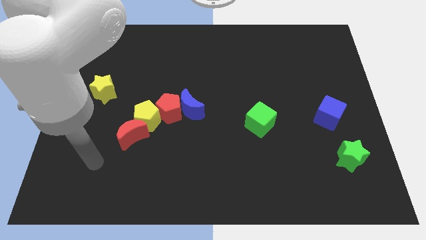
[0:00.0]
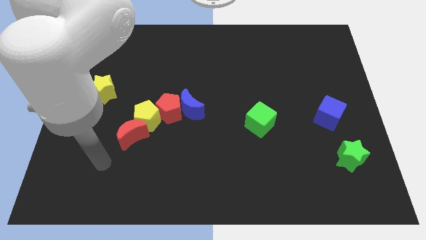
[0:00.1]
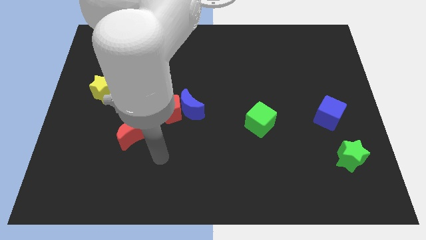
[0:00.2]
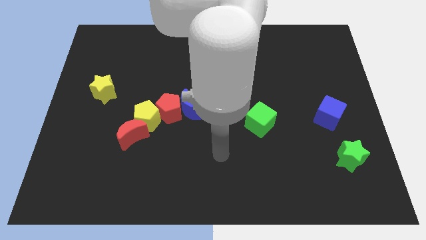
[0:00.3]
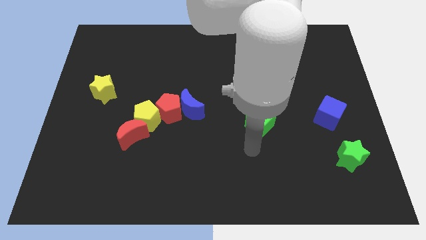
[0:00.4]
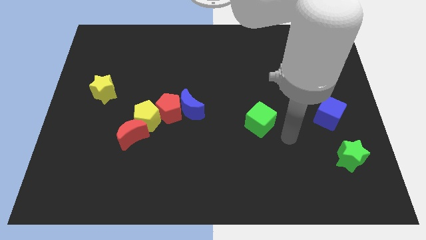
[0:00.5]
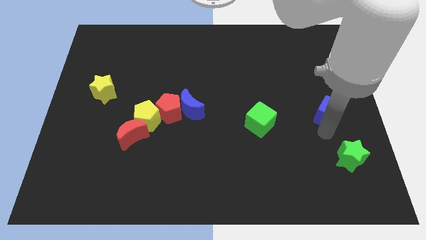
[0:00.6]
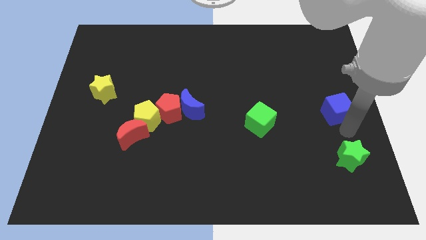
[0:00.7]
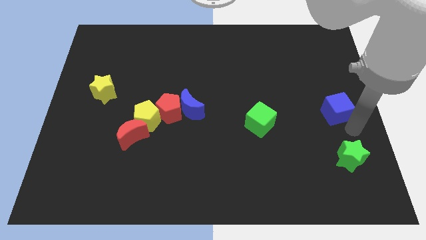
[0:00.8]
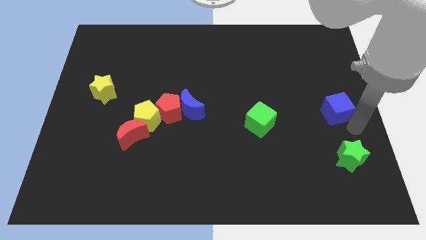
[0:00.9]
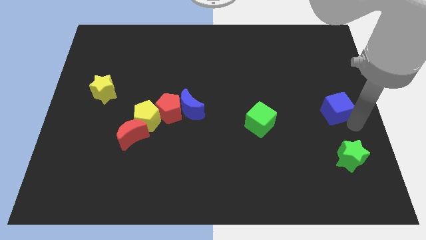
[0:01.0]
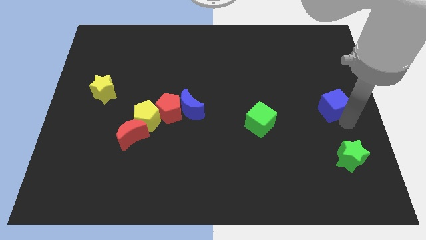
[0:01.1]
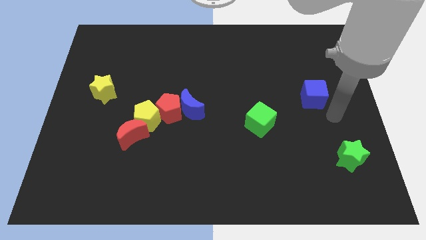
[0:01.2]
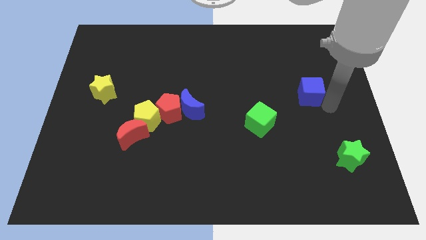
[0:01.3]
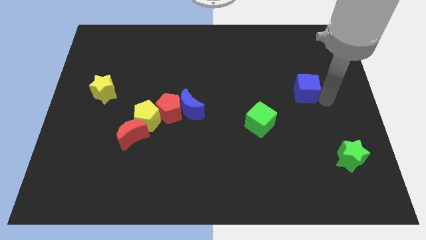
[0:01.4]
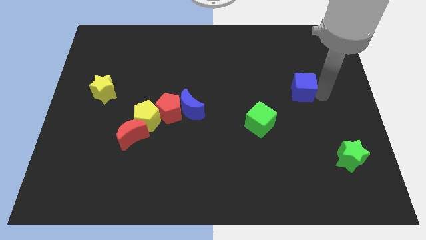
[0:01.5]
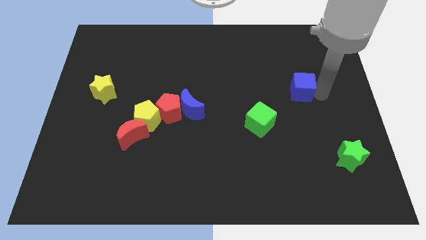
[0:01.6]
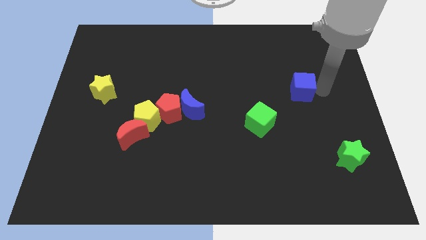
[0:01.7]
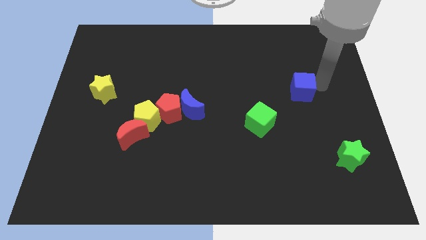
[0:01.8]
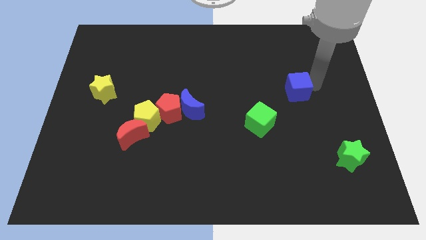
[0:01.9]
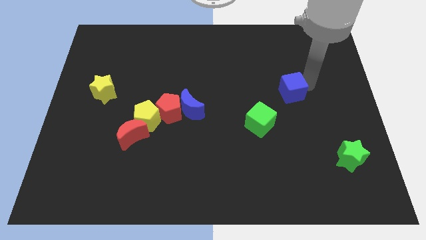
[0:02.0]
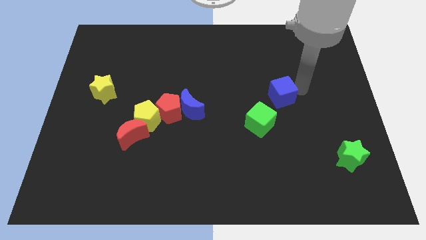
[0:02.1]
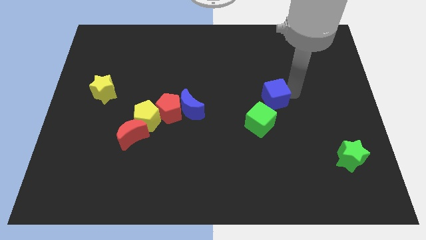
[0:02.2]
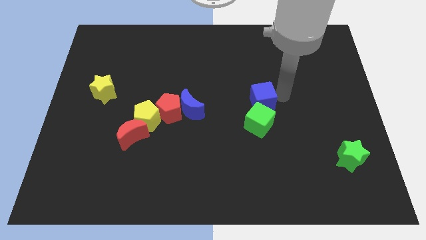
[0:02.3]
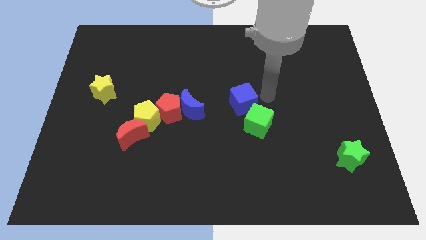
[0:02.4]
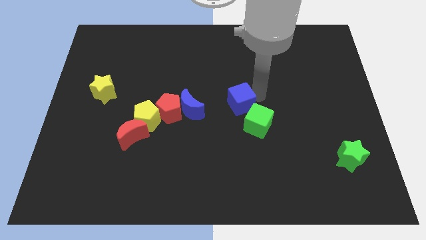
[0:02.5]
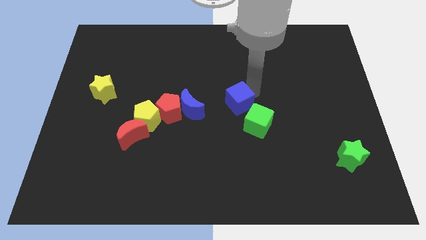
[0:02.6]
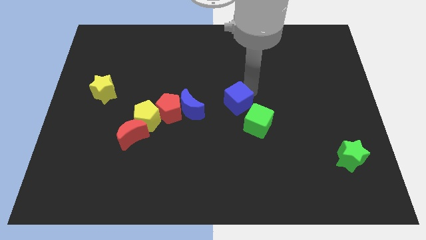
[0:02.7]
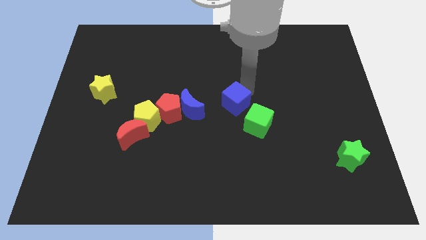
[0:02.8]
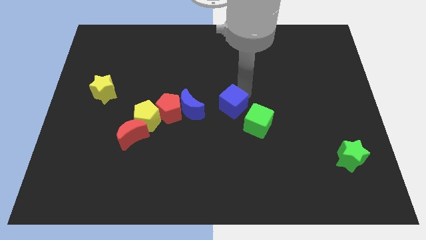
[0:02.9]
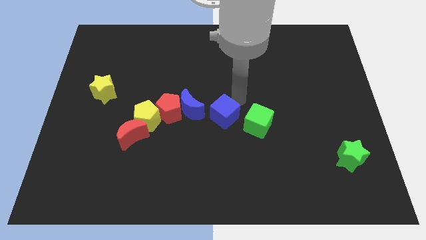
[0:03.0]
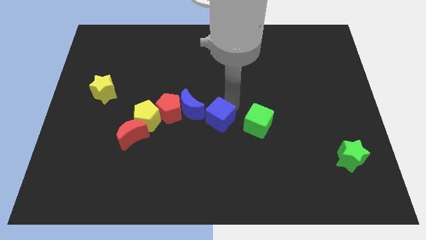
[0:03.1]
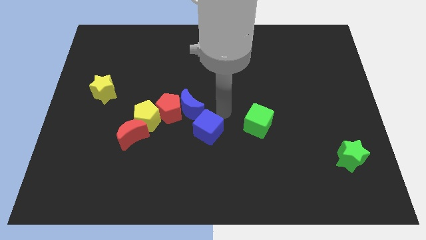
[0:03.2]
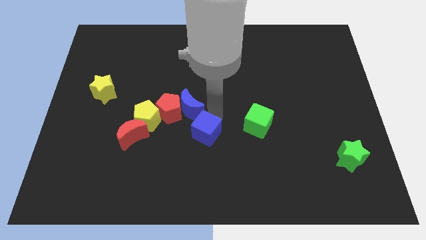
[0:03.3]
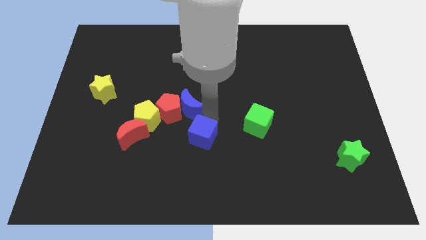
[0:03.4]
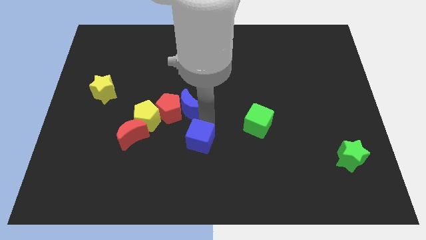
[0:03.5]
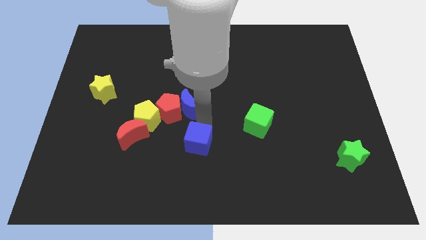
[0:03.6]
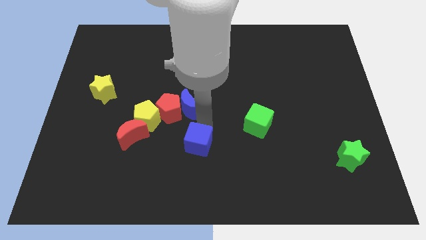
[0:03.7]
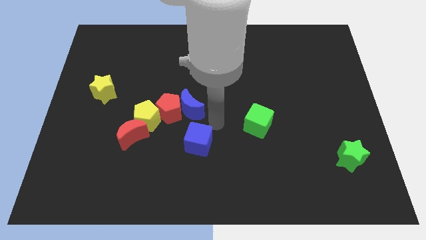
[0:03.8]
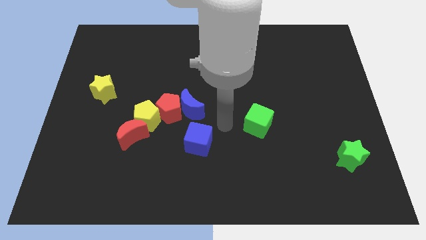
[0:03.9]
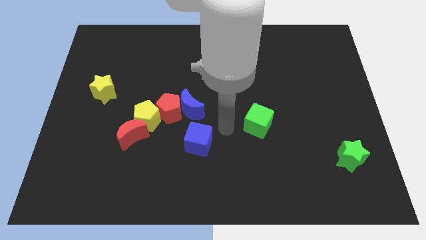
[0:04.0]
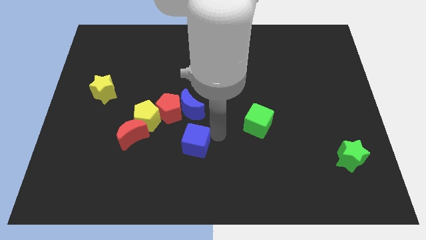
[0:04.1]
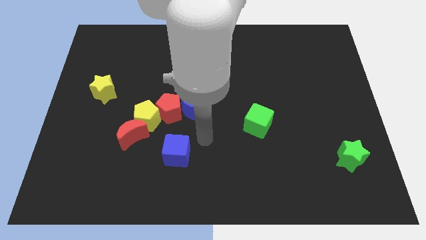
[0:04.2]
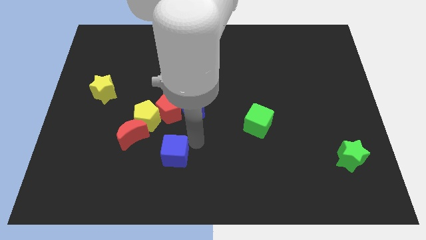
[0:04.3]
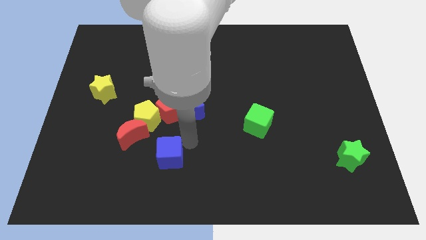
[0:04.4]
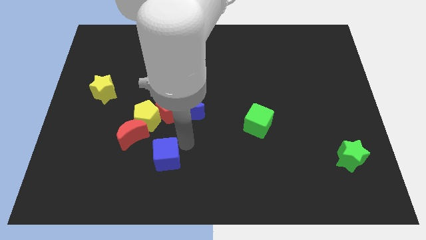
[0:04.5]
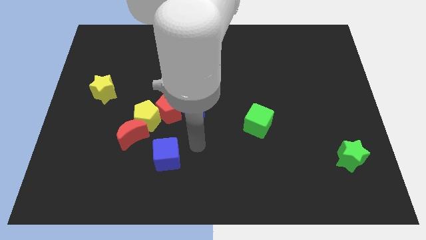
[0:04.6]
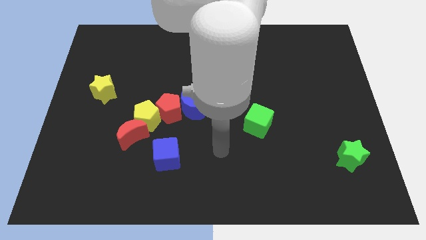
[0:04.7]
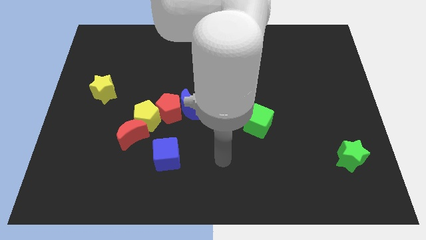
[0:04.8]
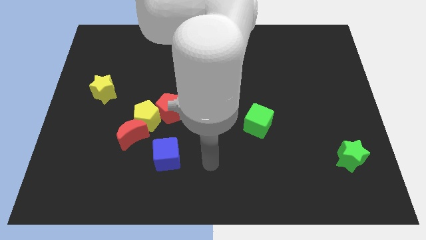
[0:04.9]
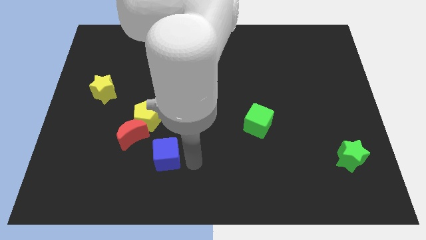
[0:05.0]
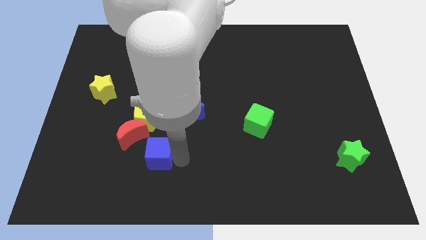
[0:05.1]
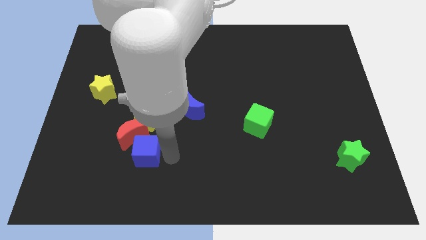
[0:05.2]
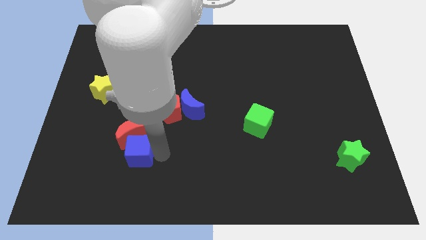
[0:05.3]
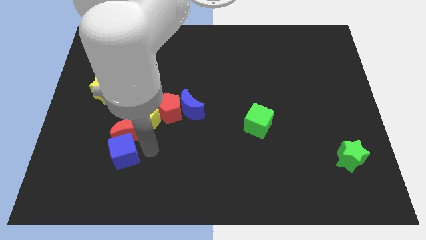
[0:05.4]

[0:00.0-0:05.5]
put the blue cube next to the red moon

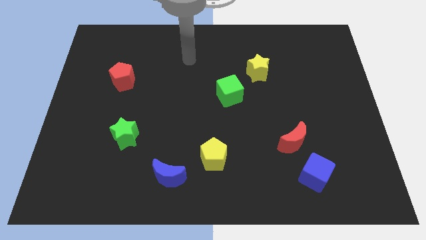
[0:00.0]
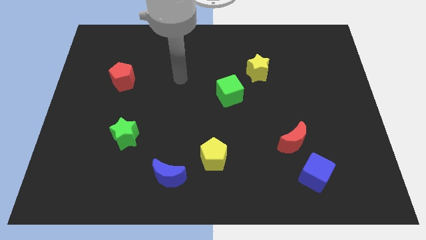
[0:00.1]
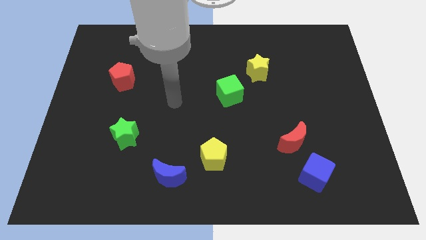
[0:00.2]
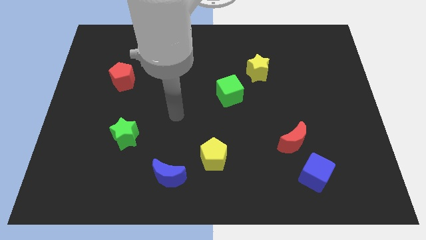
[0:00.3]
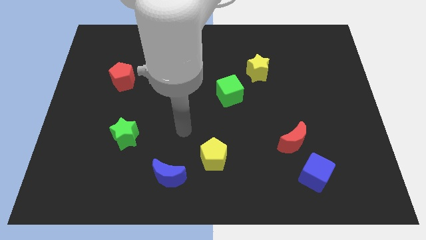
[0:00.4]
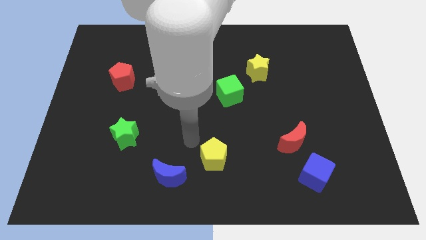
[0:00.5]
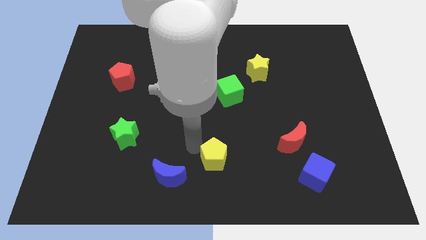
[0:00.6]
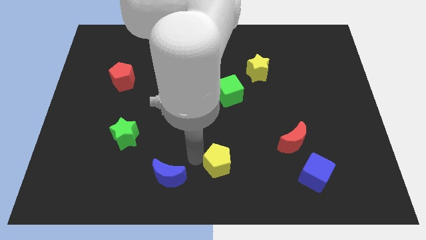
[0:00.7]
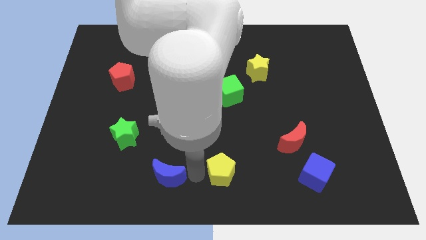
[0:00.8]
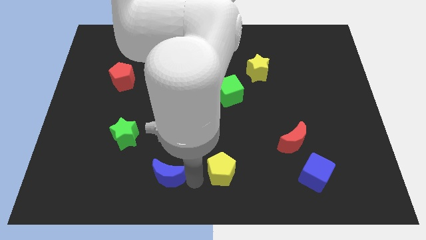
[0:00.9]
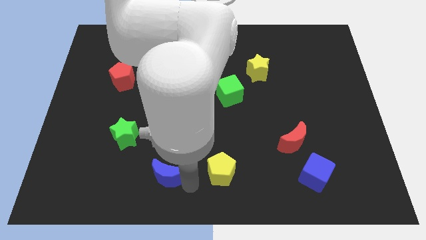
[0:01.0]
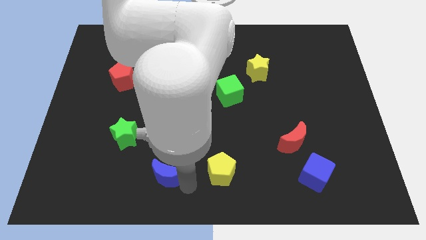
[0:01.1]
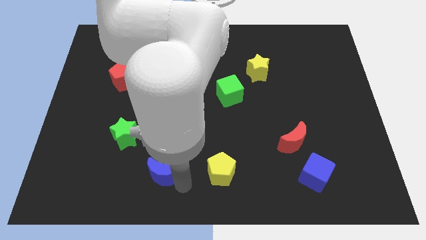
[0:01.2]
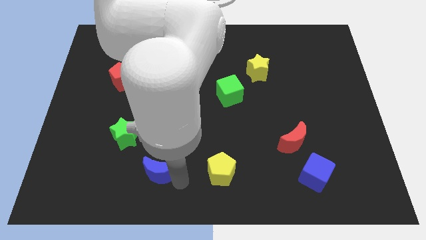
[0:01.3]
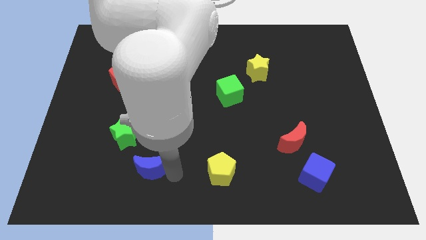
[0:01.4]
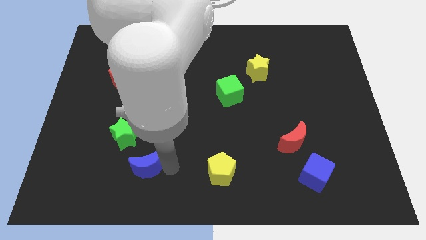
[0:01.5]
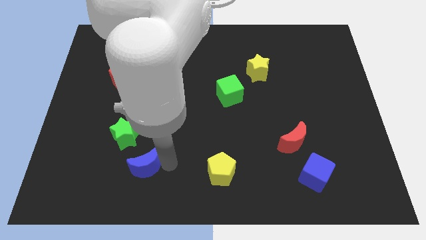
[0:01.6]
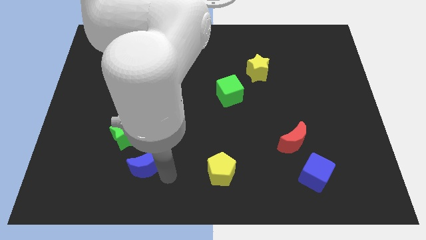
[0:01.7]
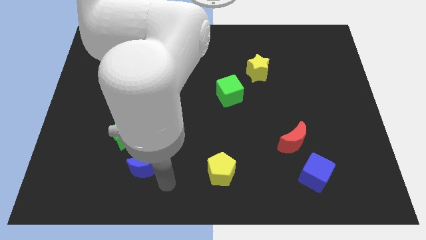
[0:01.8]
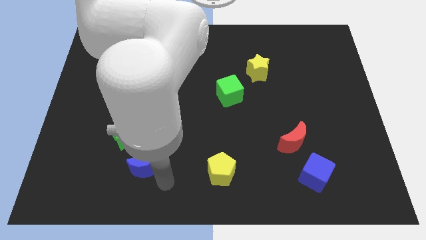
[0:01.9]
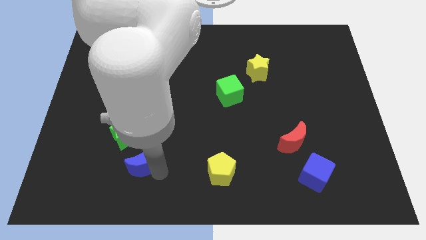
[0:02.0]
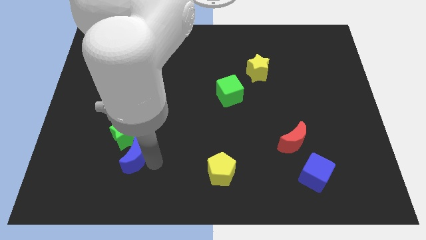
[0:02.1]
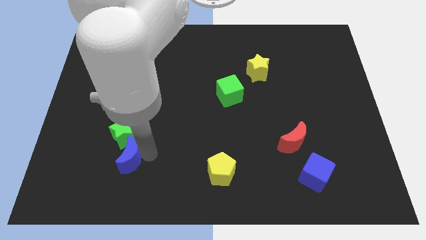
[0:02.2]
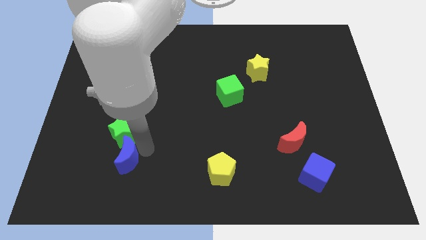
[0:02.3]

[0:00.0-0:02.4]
put the blue moon to the green star

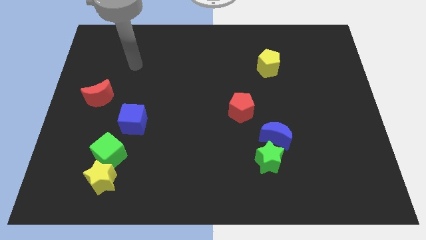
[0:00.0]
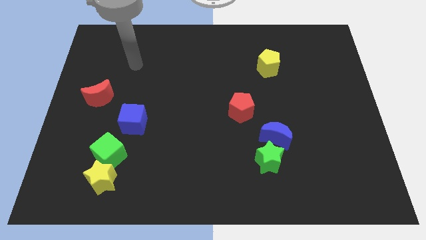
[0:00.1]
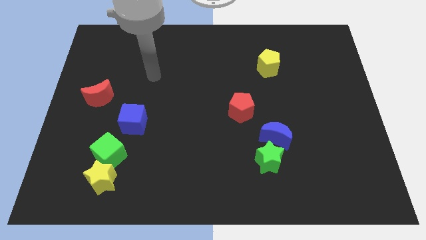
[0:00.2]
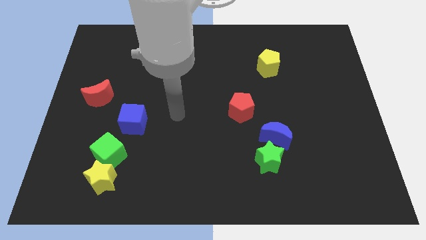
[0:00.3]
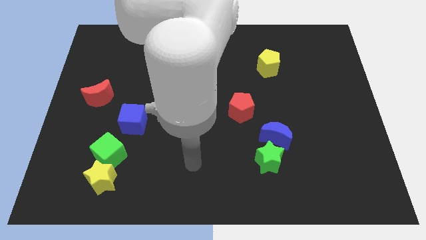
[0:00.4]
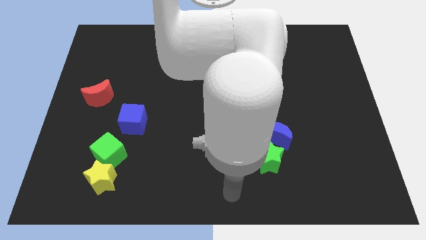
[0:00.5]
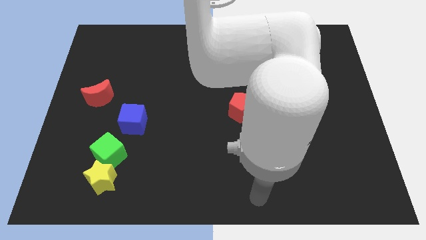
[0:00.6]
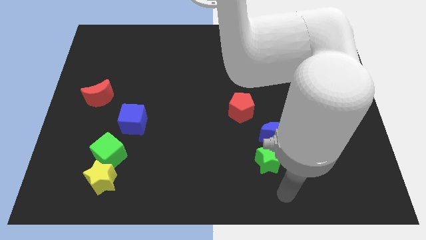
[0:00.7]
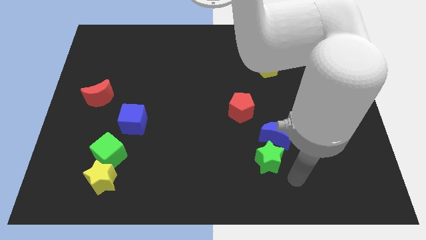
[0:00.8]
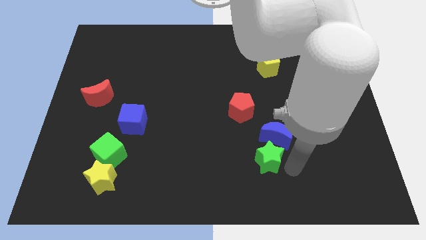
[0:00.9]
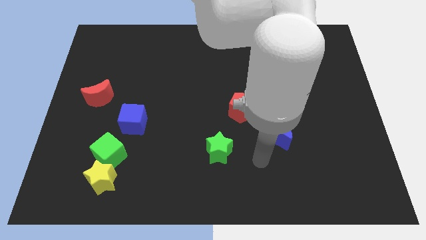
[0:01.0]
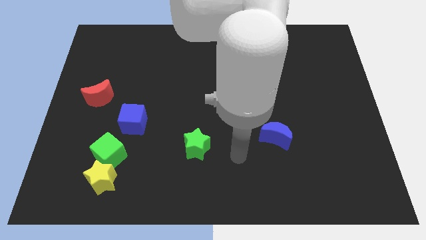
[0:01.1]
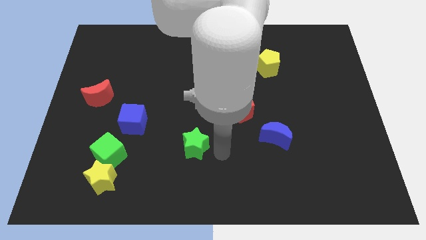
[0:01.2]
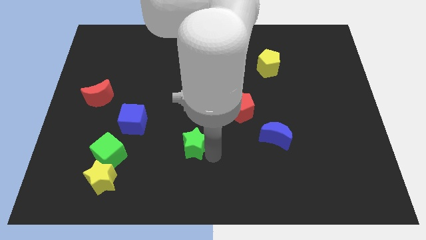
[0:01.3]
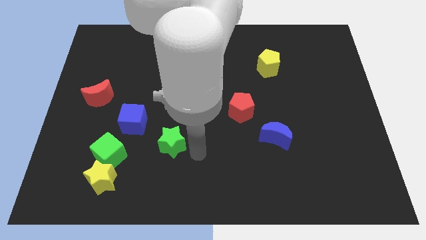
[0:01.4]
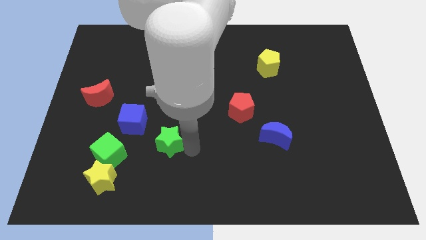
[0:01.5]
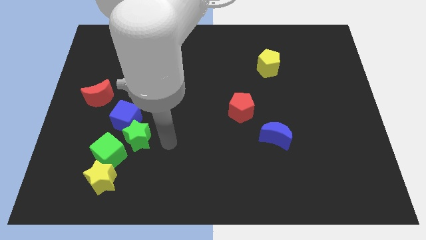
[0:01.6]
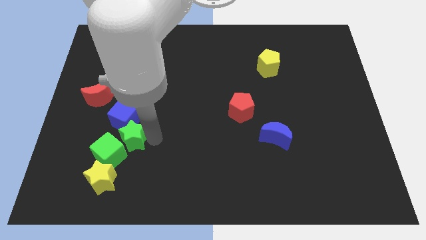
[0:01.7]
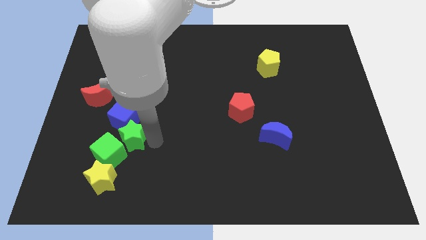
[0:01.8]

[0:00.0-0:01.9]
push the green star to the blue cube
